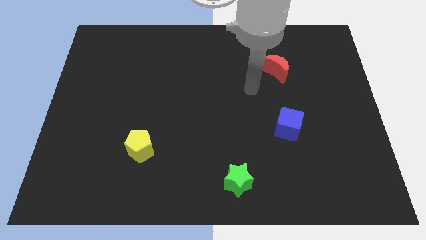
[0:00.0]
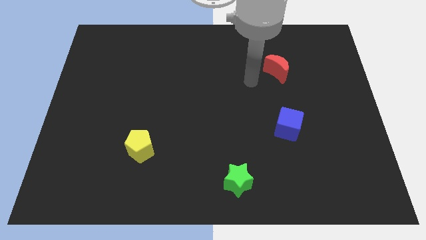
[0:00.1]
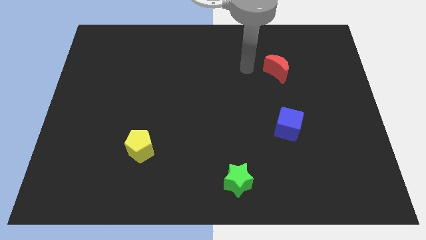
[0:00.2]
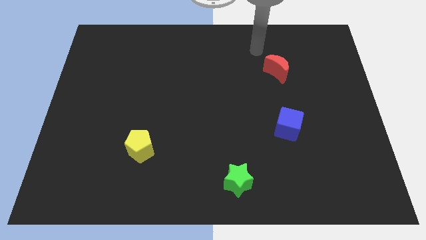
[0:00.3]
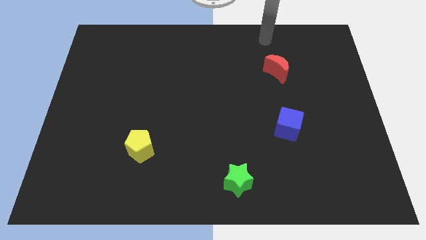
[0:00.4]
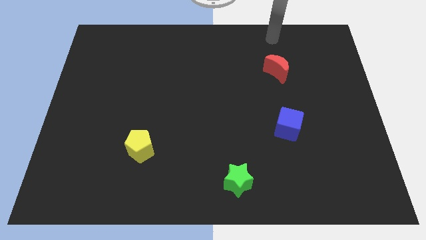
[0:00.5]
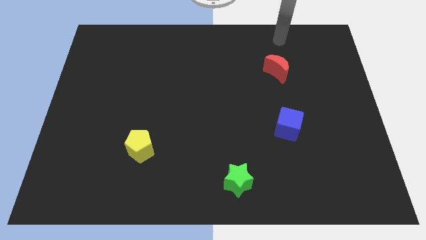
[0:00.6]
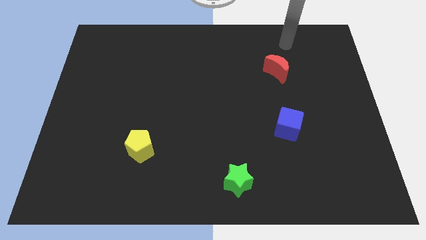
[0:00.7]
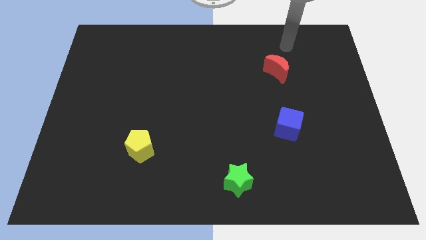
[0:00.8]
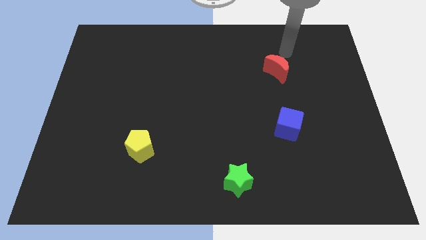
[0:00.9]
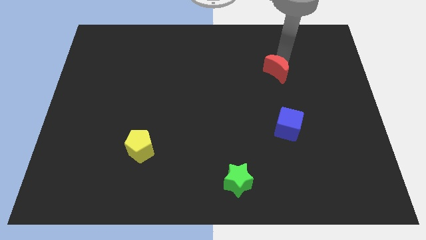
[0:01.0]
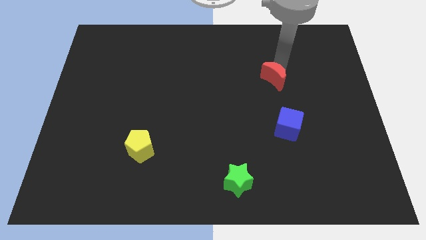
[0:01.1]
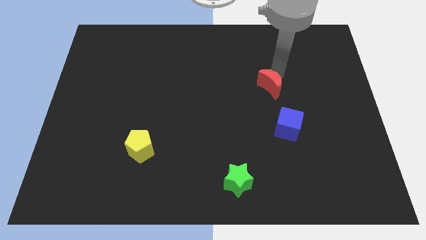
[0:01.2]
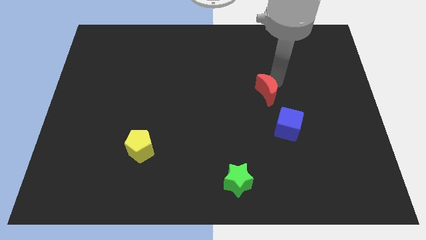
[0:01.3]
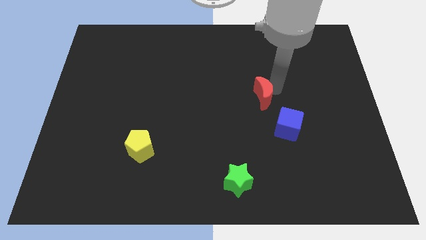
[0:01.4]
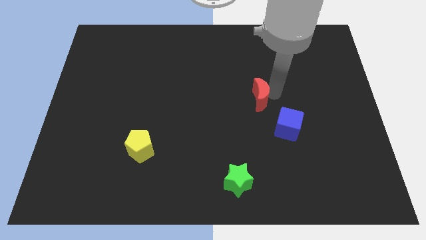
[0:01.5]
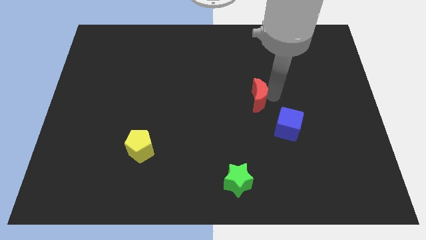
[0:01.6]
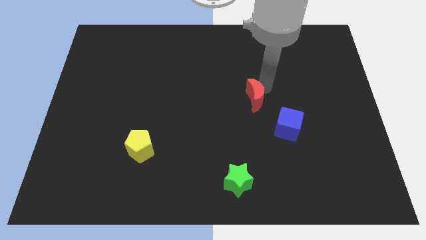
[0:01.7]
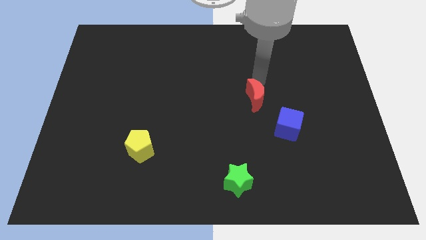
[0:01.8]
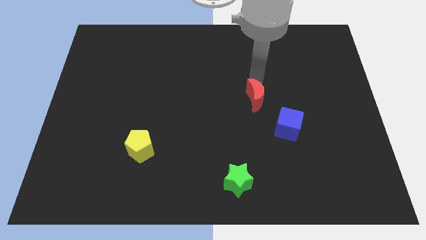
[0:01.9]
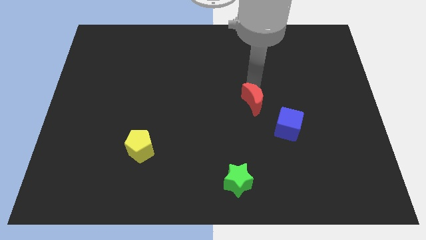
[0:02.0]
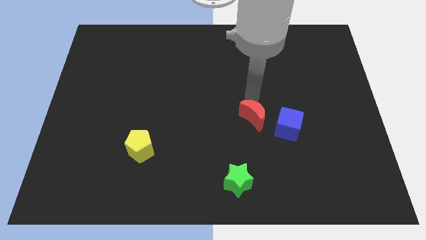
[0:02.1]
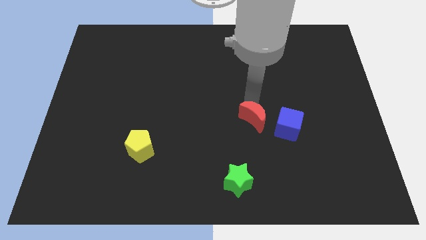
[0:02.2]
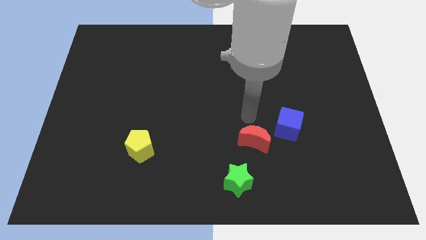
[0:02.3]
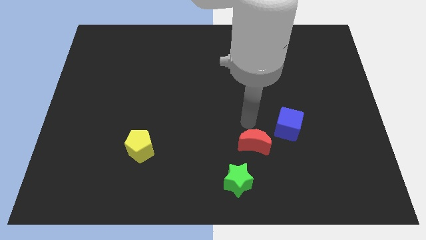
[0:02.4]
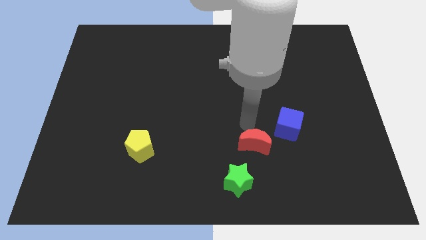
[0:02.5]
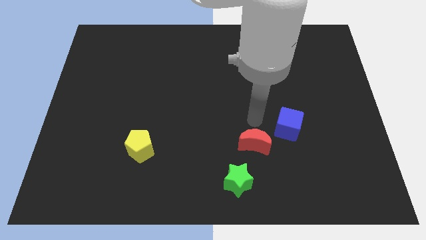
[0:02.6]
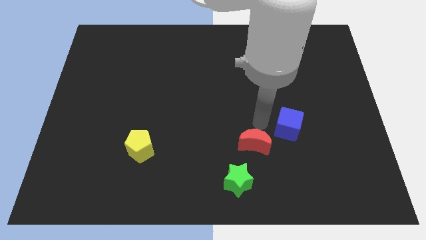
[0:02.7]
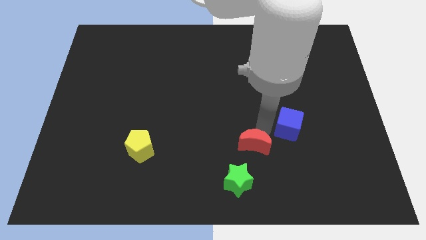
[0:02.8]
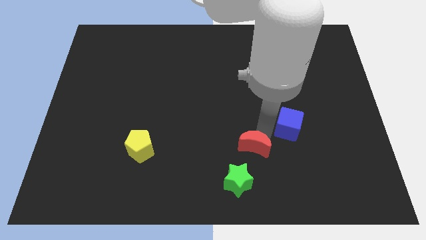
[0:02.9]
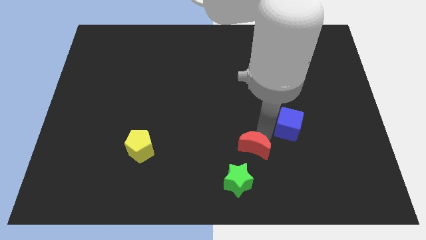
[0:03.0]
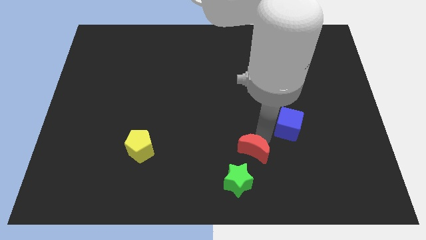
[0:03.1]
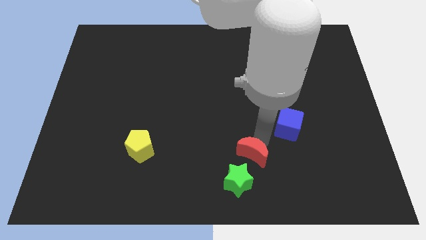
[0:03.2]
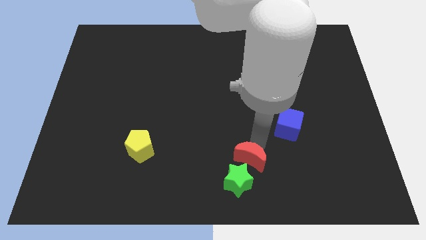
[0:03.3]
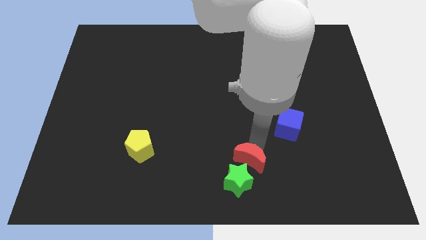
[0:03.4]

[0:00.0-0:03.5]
push the red block next to the star

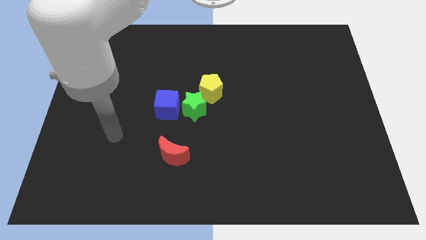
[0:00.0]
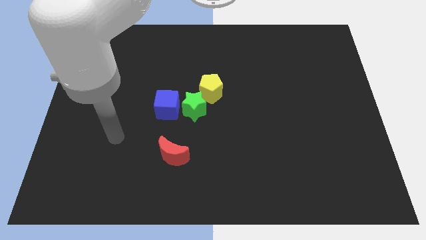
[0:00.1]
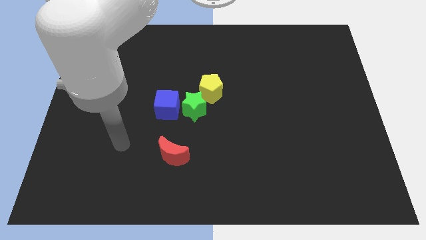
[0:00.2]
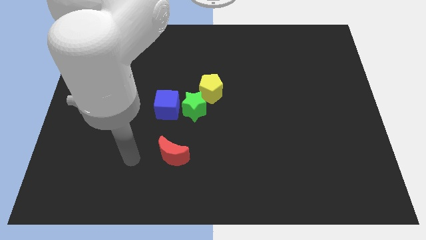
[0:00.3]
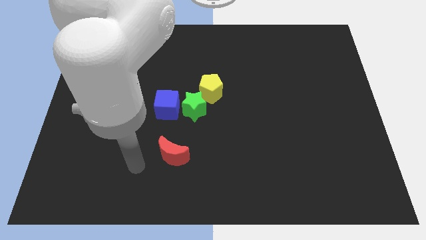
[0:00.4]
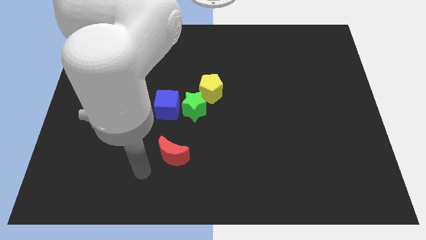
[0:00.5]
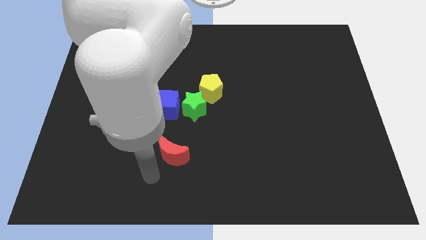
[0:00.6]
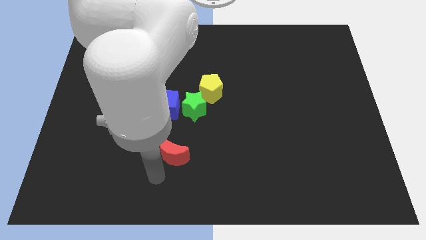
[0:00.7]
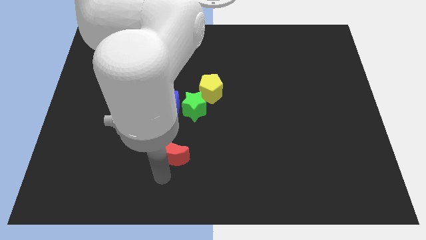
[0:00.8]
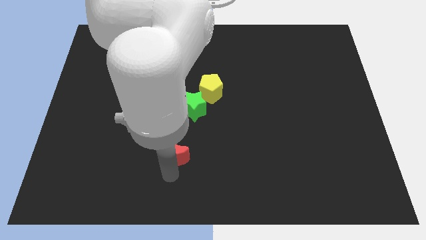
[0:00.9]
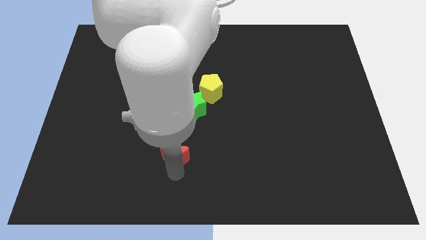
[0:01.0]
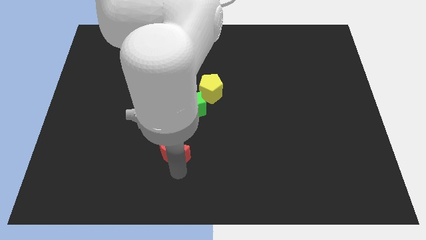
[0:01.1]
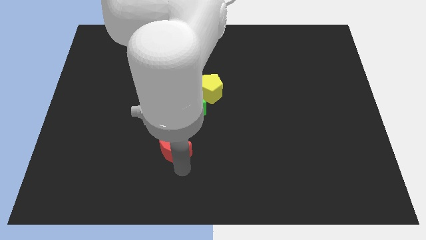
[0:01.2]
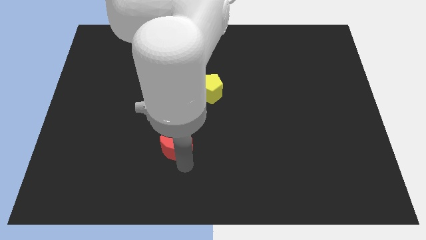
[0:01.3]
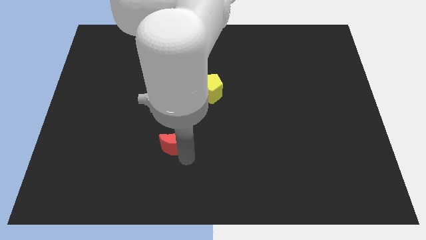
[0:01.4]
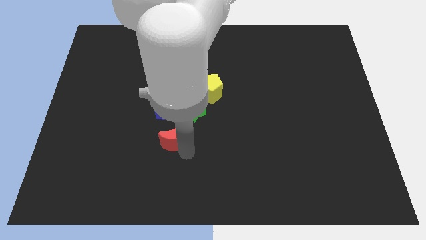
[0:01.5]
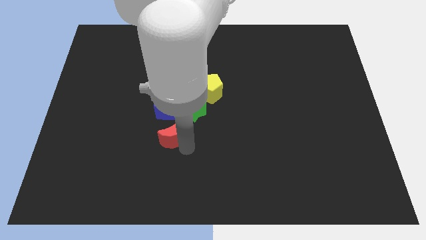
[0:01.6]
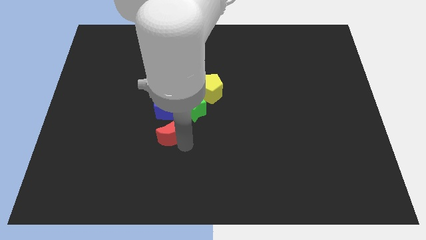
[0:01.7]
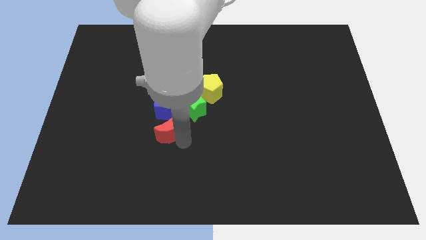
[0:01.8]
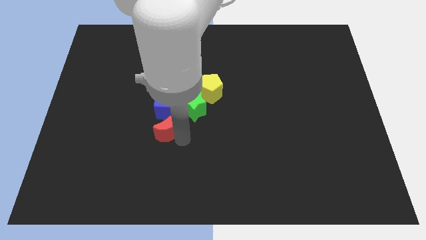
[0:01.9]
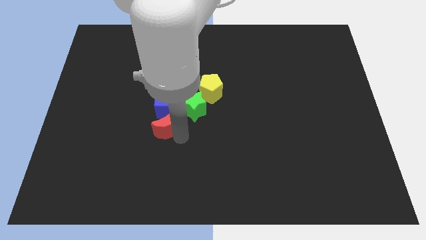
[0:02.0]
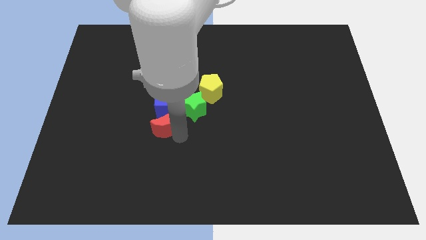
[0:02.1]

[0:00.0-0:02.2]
put the red block towards the cube

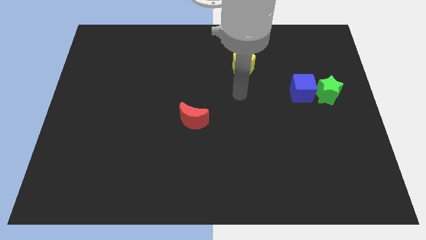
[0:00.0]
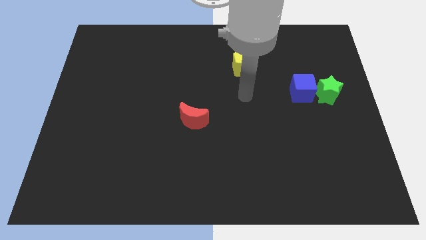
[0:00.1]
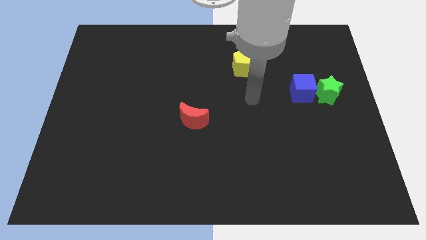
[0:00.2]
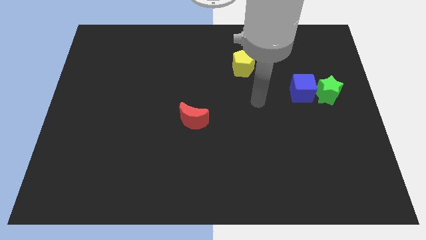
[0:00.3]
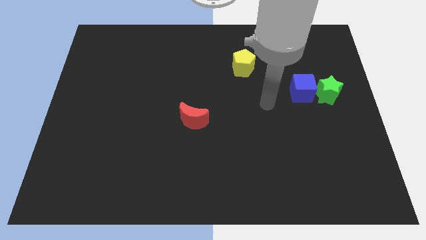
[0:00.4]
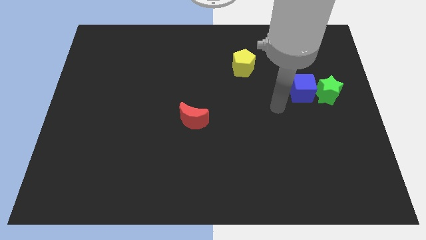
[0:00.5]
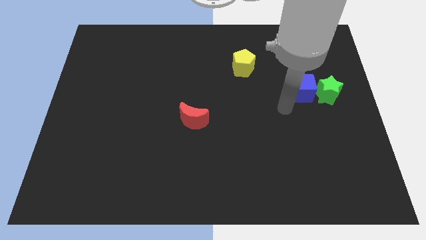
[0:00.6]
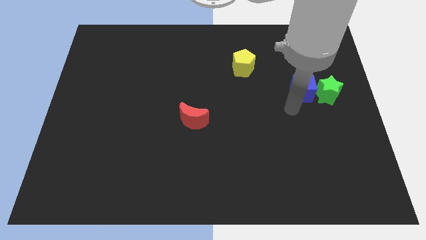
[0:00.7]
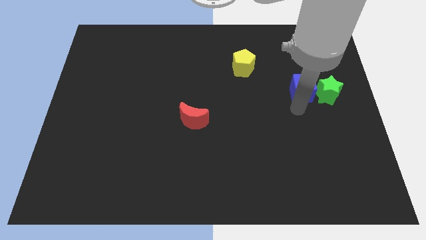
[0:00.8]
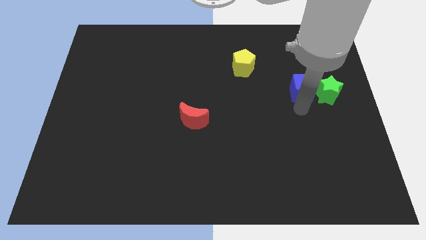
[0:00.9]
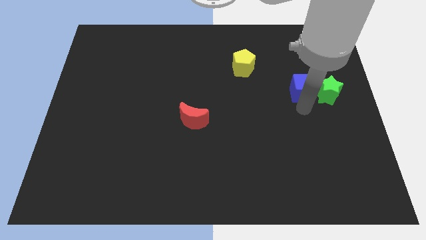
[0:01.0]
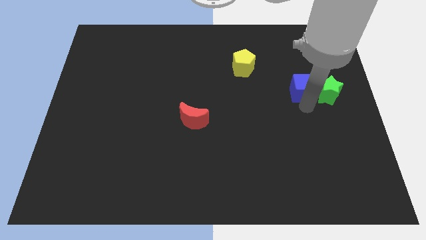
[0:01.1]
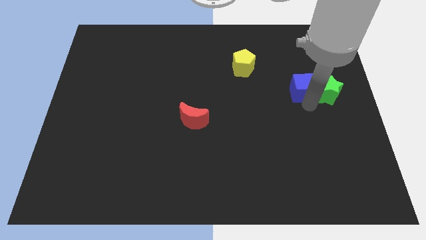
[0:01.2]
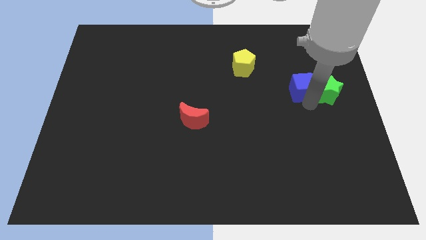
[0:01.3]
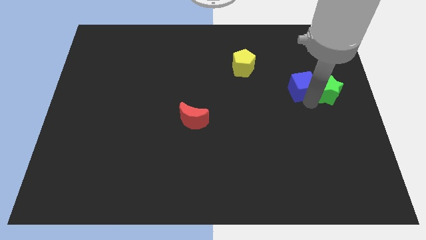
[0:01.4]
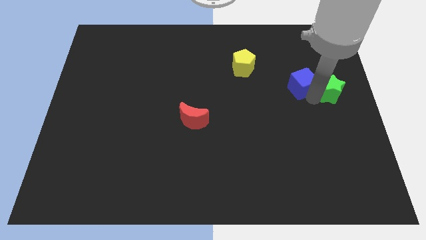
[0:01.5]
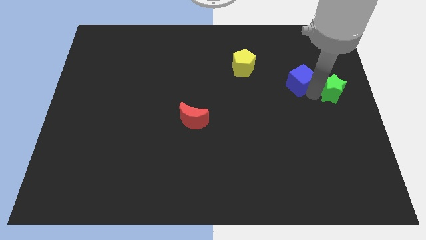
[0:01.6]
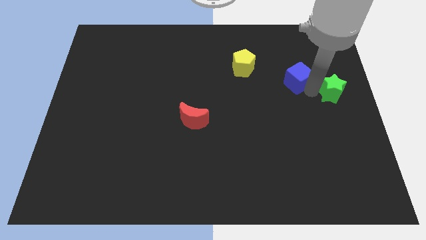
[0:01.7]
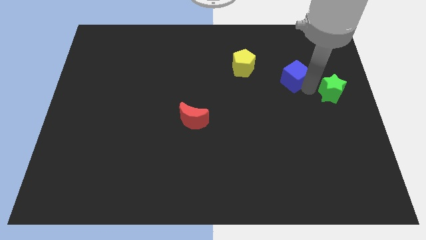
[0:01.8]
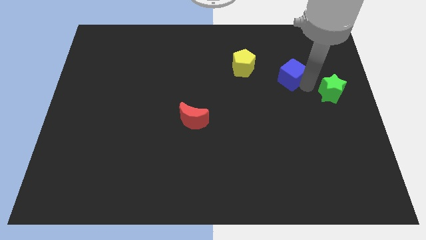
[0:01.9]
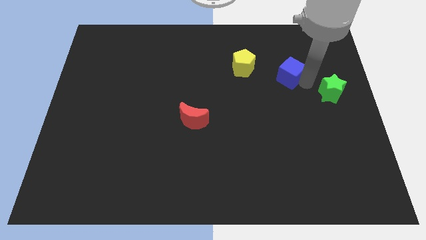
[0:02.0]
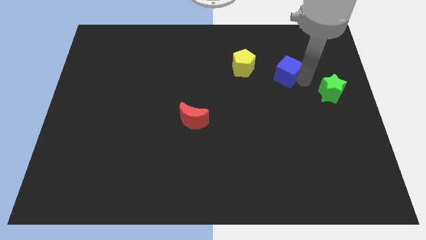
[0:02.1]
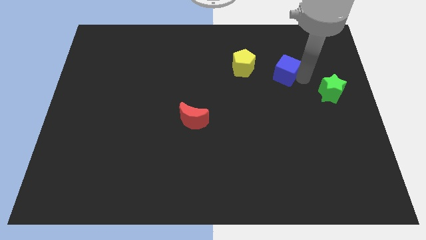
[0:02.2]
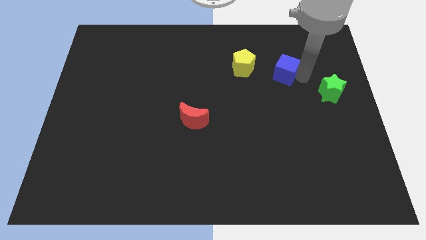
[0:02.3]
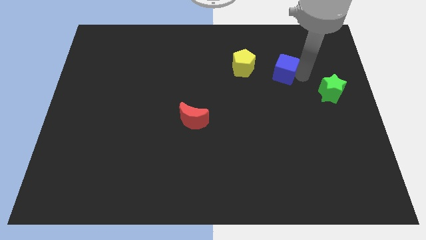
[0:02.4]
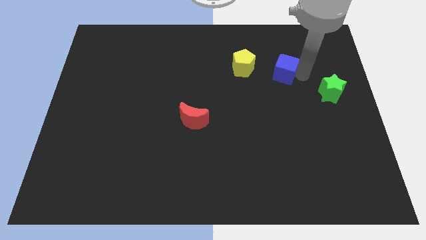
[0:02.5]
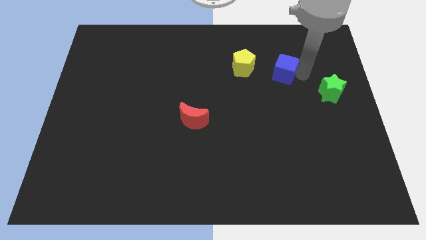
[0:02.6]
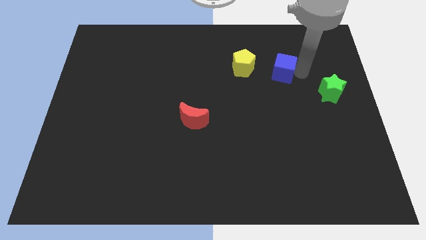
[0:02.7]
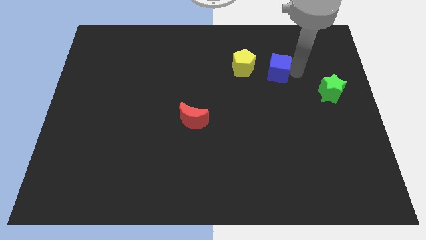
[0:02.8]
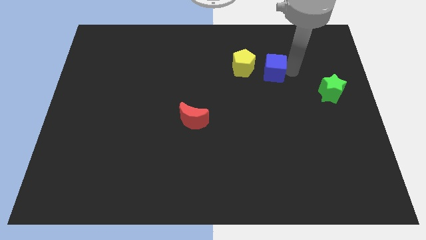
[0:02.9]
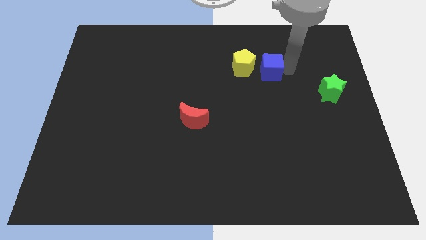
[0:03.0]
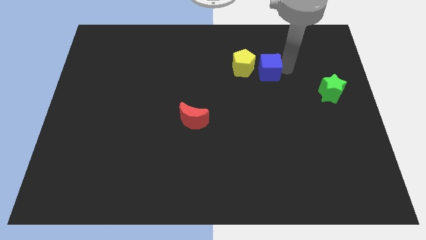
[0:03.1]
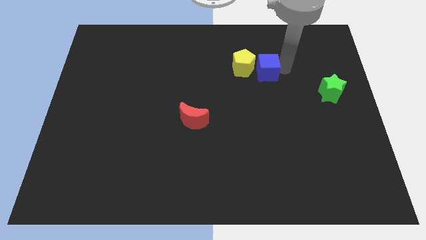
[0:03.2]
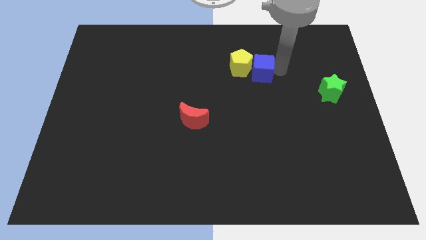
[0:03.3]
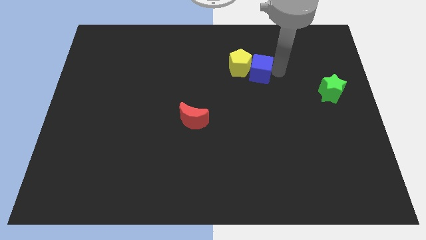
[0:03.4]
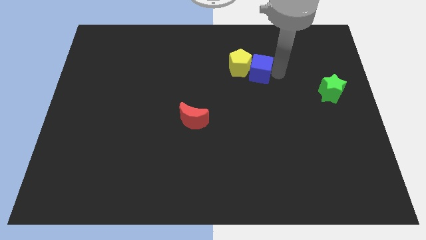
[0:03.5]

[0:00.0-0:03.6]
put the blue cube towards the yellow block
